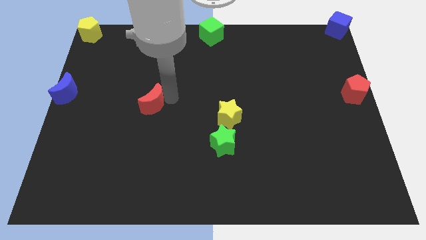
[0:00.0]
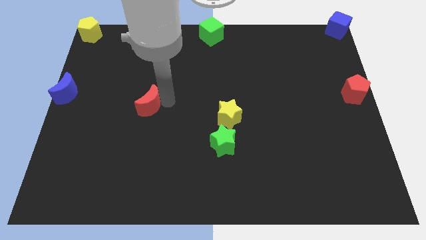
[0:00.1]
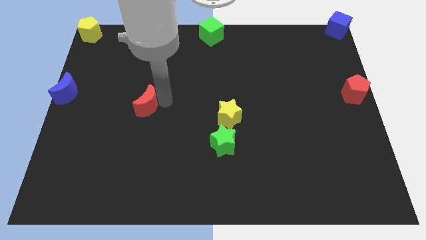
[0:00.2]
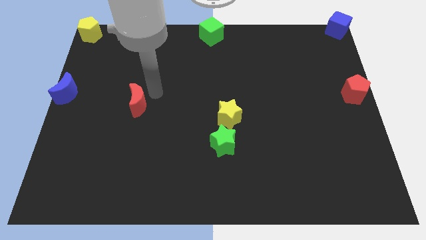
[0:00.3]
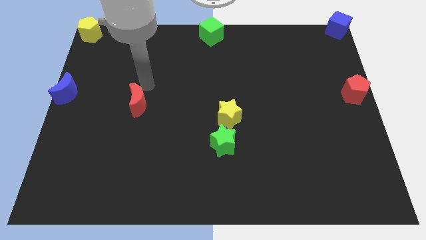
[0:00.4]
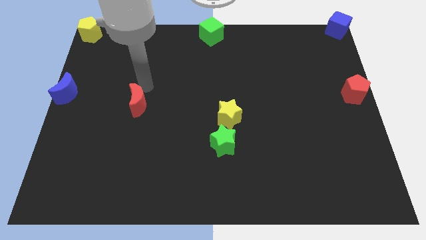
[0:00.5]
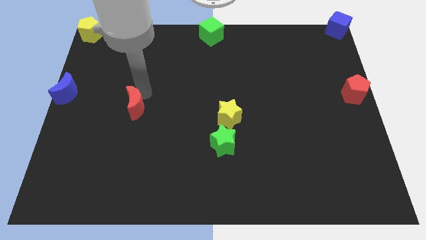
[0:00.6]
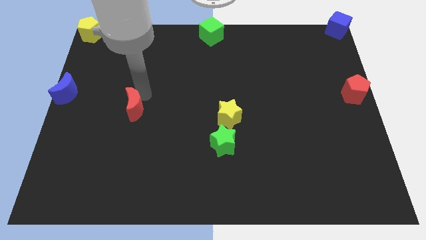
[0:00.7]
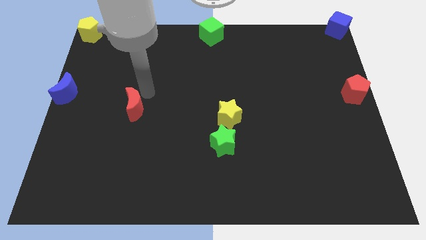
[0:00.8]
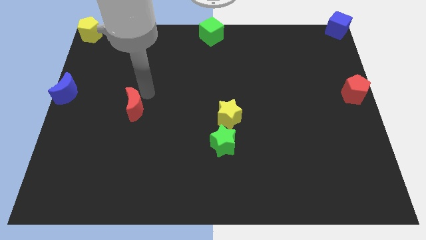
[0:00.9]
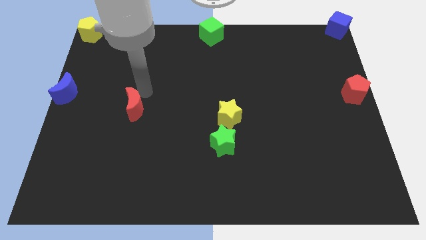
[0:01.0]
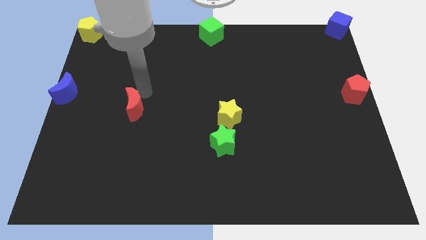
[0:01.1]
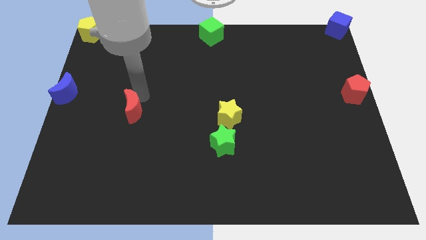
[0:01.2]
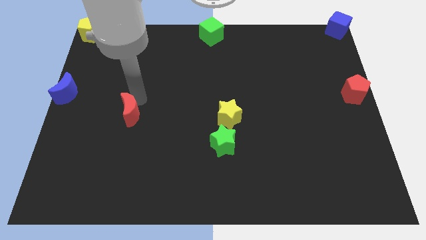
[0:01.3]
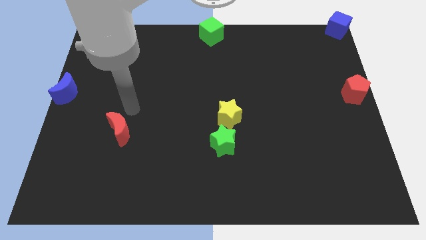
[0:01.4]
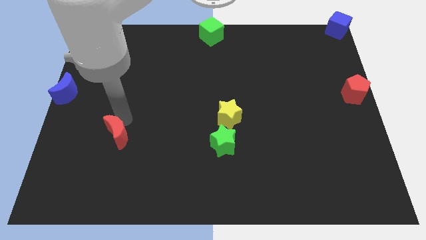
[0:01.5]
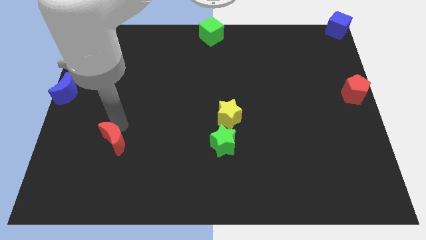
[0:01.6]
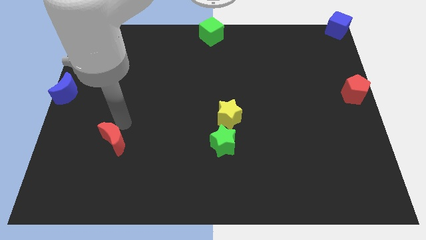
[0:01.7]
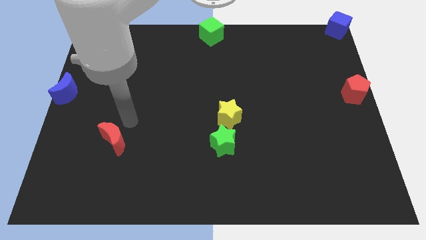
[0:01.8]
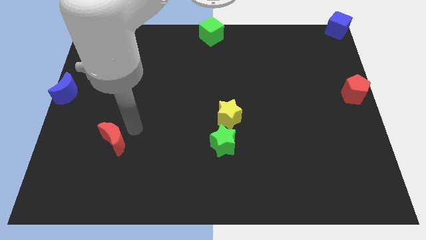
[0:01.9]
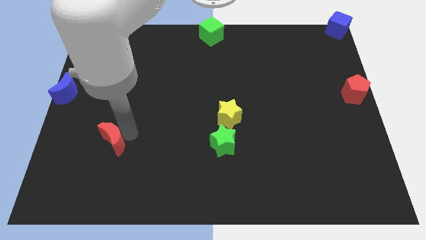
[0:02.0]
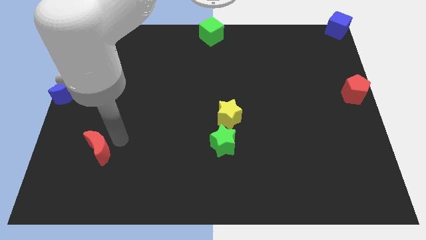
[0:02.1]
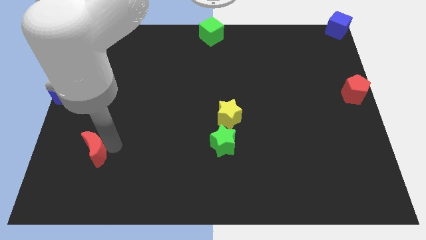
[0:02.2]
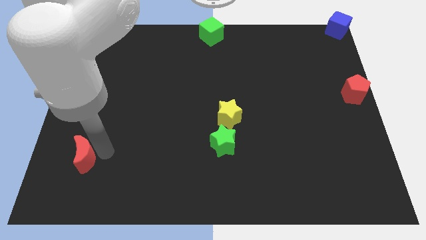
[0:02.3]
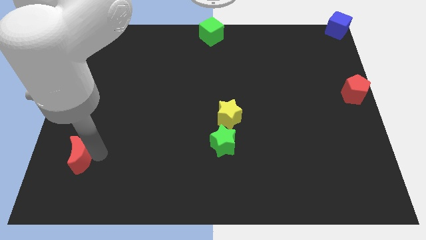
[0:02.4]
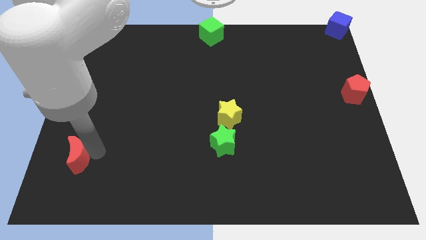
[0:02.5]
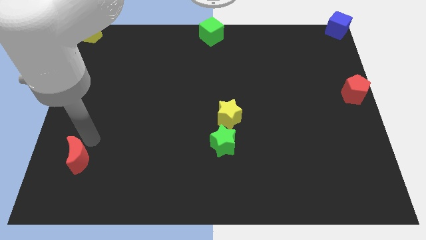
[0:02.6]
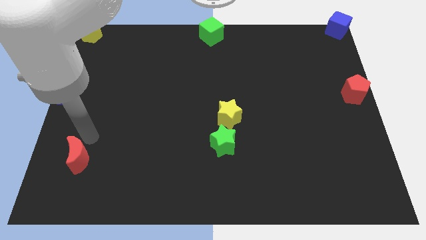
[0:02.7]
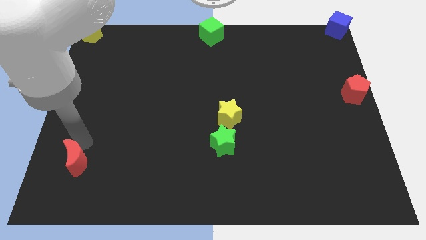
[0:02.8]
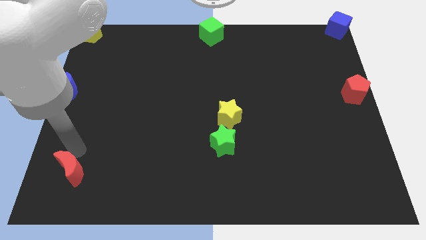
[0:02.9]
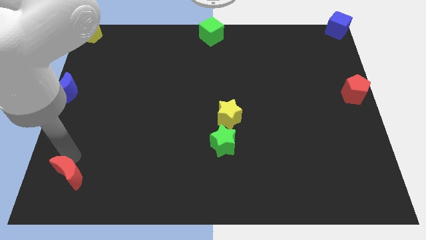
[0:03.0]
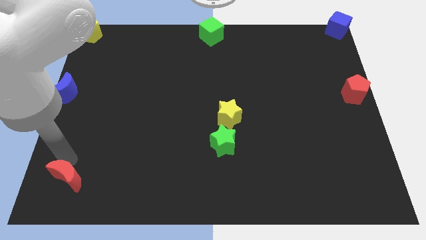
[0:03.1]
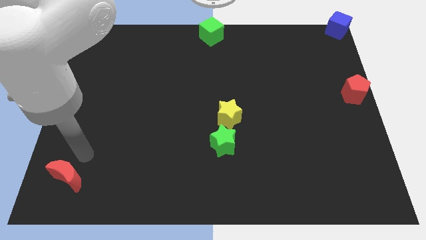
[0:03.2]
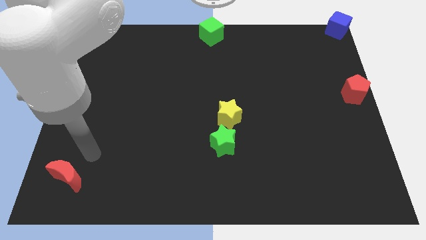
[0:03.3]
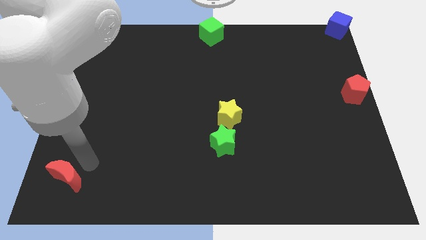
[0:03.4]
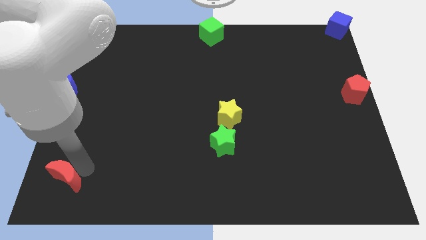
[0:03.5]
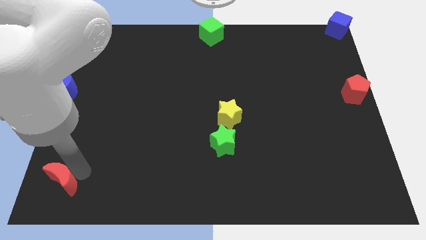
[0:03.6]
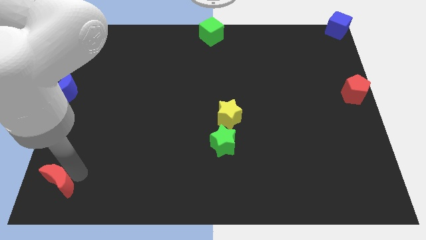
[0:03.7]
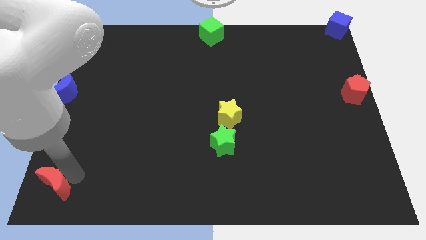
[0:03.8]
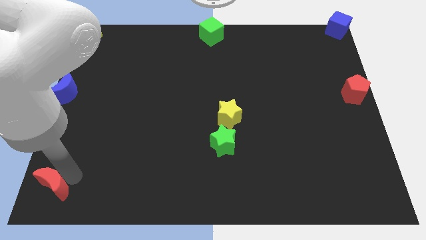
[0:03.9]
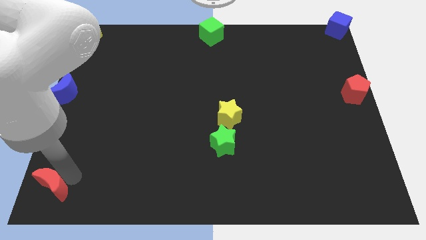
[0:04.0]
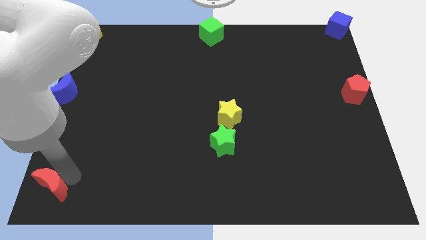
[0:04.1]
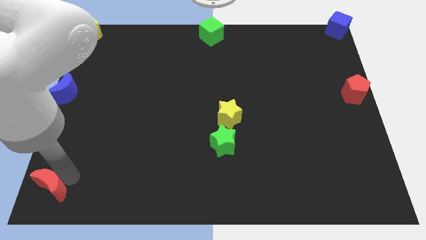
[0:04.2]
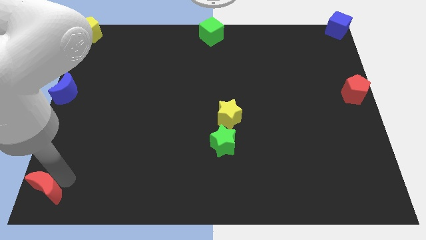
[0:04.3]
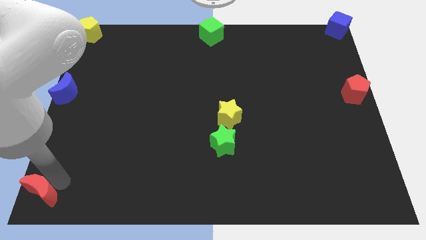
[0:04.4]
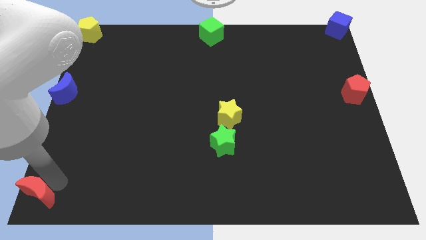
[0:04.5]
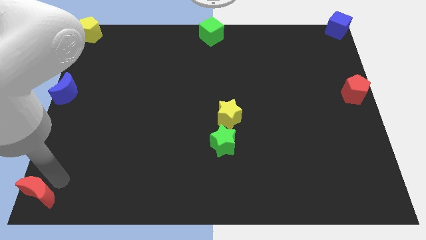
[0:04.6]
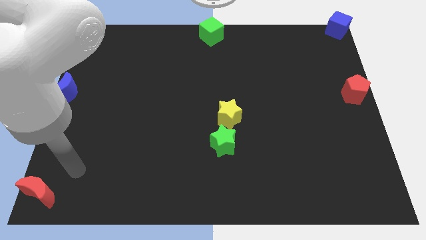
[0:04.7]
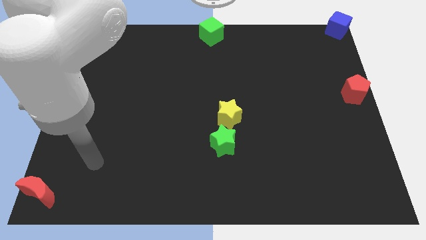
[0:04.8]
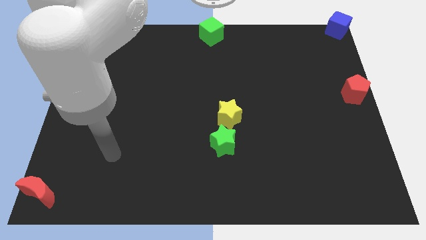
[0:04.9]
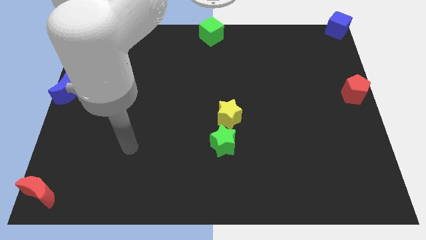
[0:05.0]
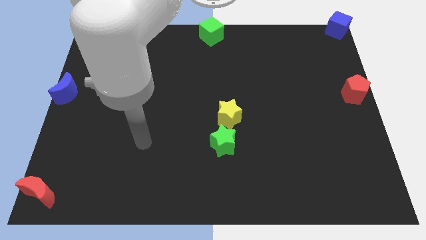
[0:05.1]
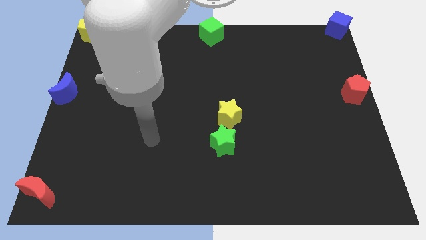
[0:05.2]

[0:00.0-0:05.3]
move the red moon to left bottom corner of the board

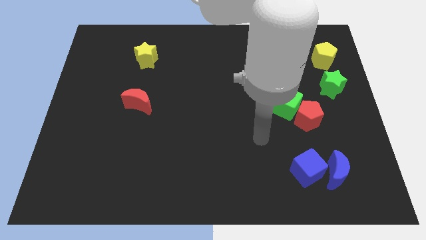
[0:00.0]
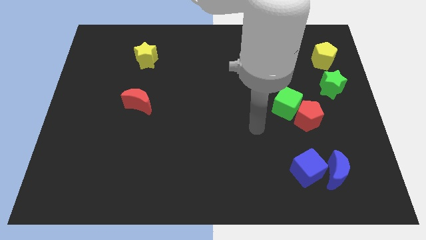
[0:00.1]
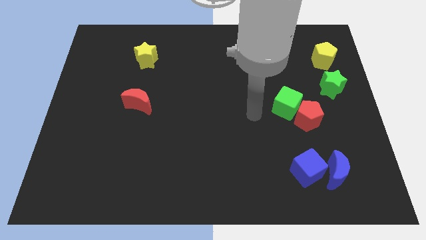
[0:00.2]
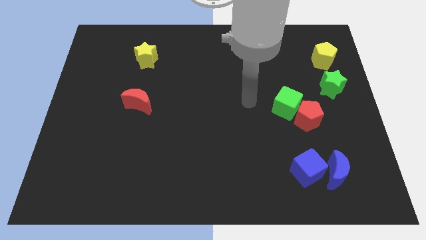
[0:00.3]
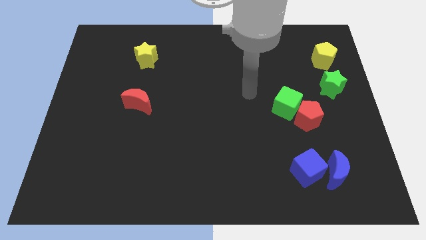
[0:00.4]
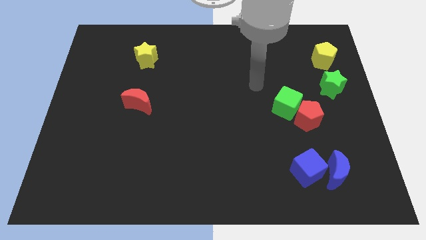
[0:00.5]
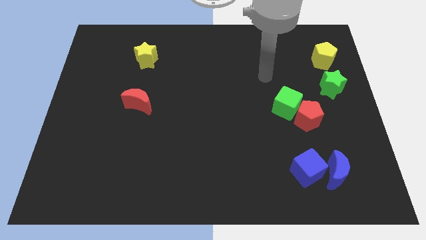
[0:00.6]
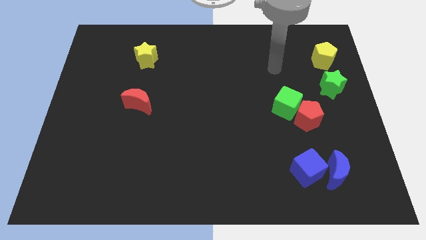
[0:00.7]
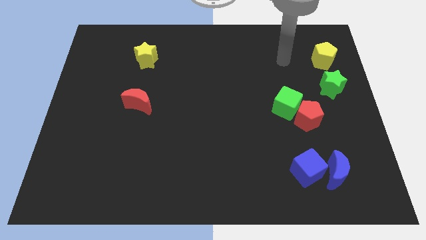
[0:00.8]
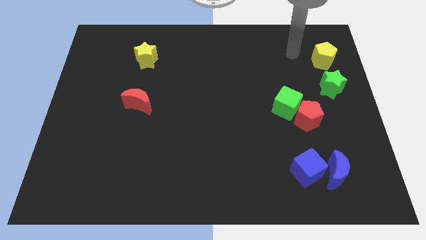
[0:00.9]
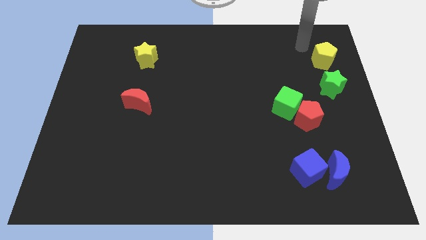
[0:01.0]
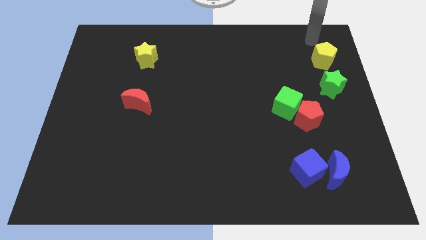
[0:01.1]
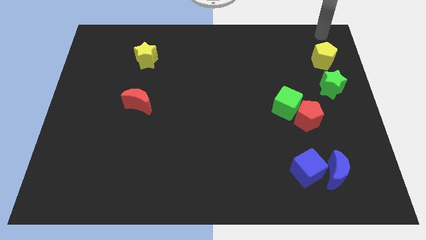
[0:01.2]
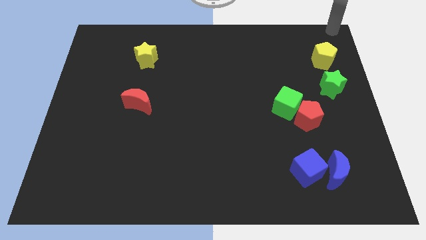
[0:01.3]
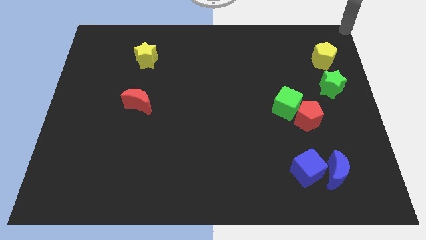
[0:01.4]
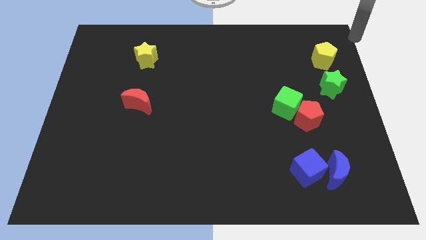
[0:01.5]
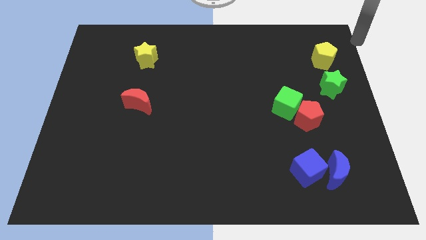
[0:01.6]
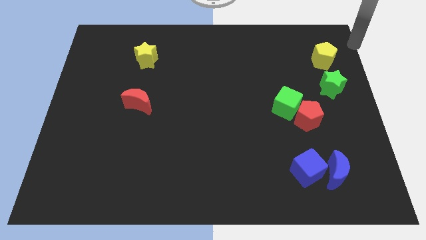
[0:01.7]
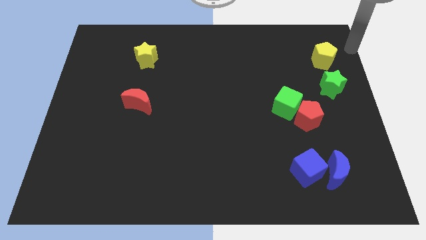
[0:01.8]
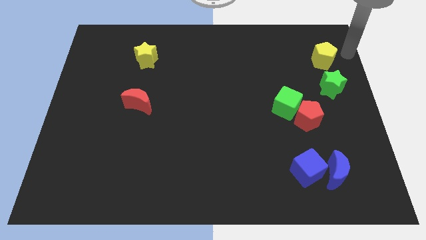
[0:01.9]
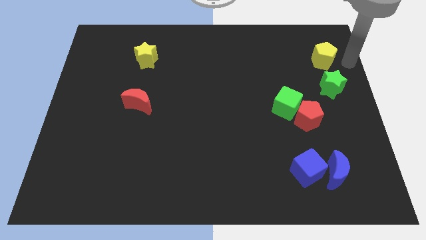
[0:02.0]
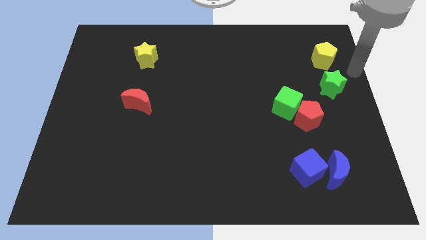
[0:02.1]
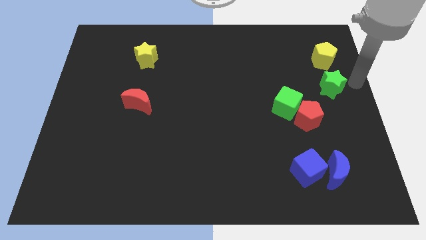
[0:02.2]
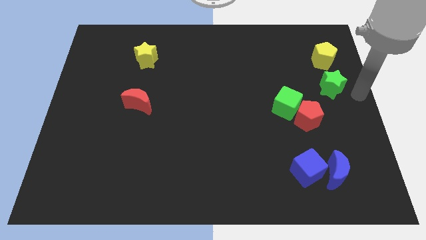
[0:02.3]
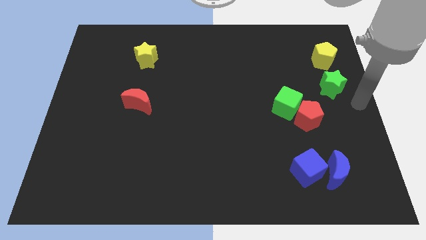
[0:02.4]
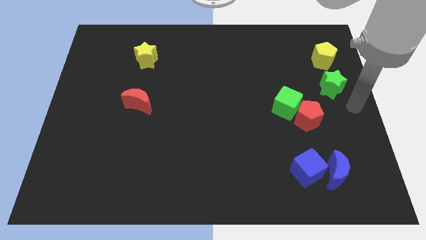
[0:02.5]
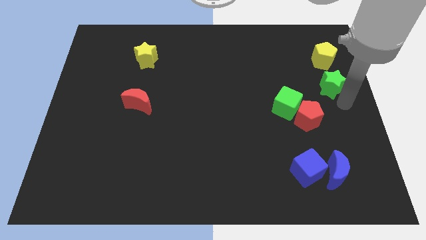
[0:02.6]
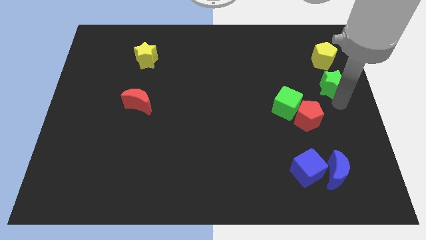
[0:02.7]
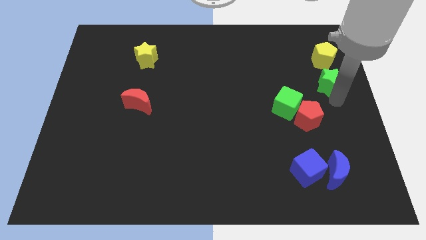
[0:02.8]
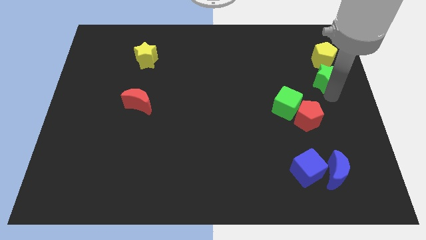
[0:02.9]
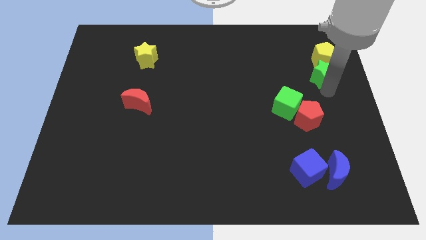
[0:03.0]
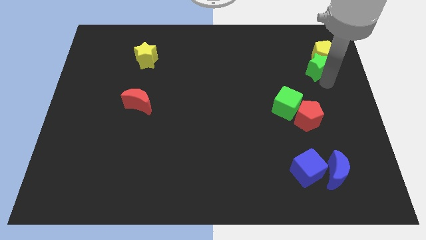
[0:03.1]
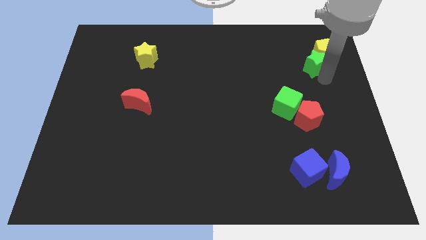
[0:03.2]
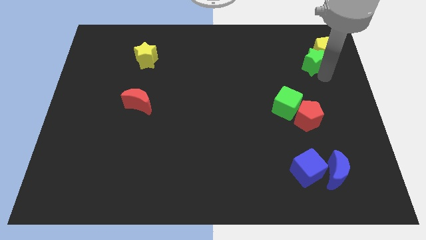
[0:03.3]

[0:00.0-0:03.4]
move the arm towards the green star

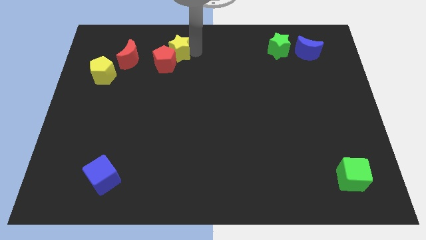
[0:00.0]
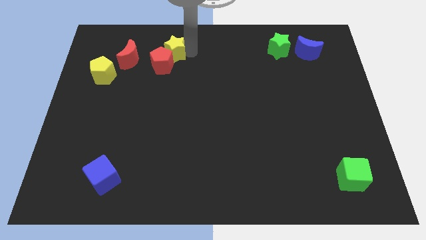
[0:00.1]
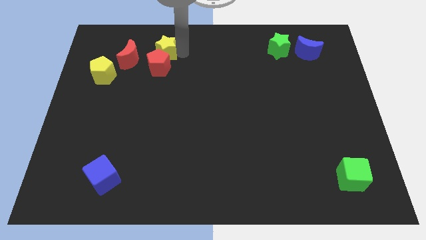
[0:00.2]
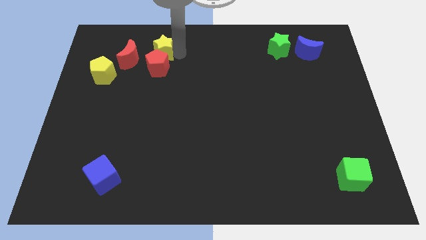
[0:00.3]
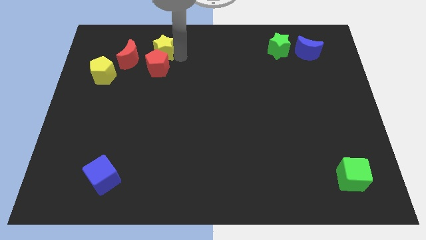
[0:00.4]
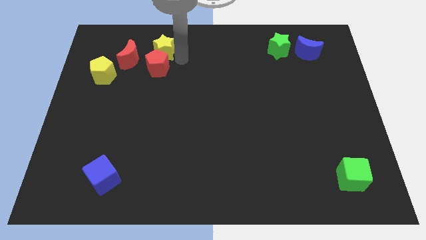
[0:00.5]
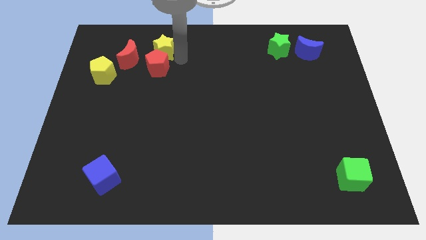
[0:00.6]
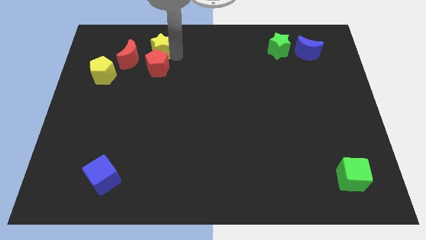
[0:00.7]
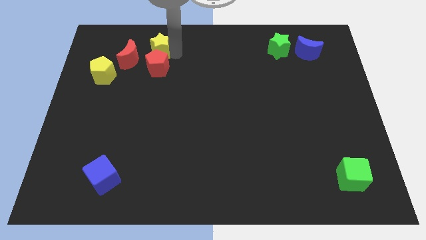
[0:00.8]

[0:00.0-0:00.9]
place the yellow star to top of the red pentagon
